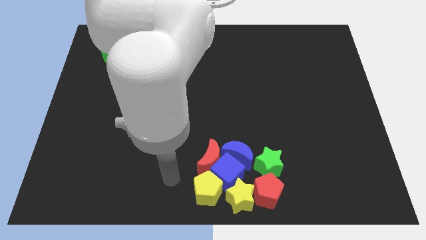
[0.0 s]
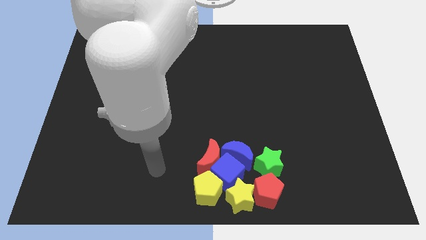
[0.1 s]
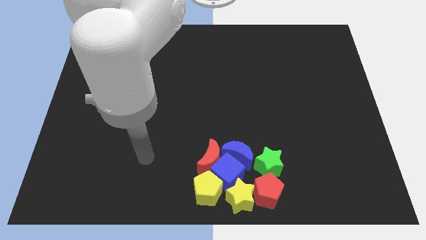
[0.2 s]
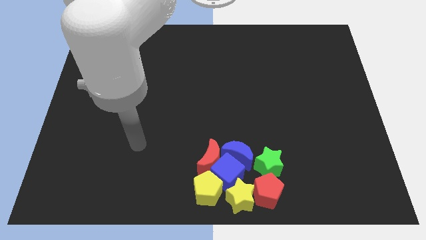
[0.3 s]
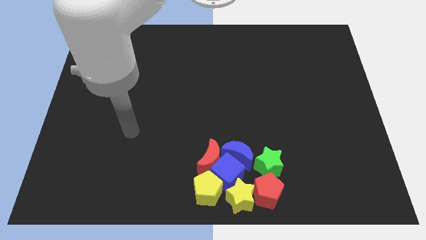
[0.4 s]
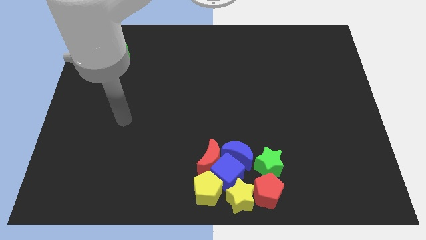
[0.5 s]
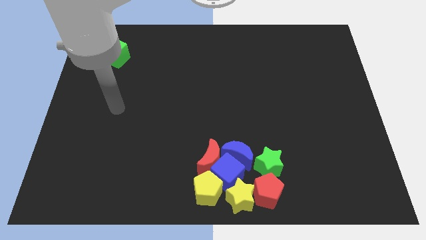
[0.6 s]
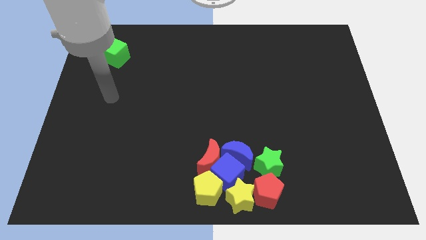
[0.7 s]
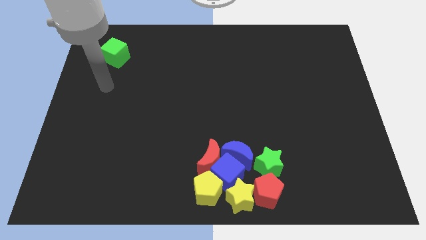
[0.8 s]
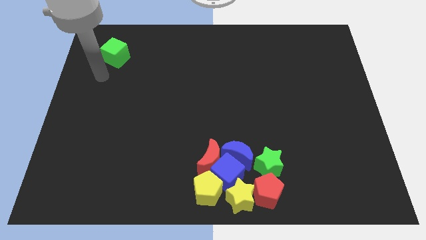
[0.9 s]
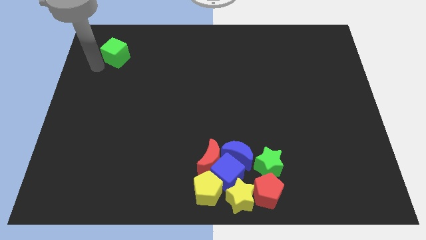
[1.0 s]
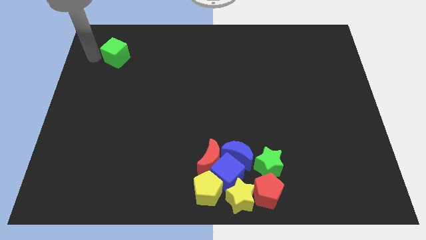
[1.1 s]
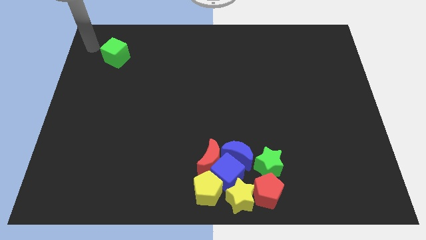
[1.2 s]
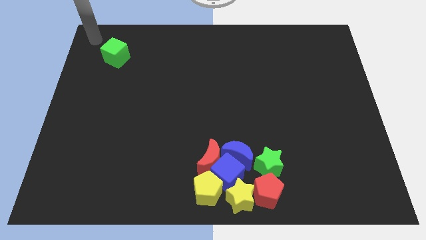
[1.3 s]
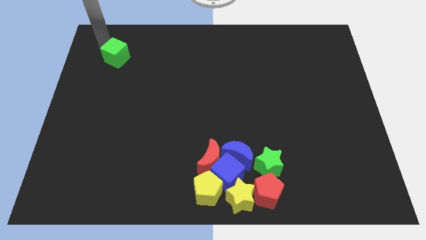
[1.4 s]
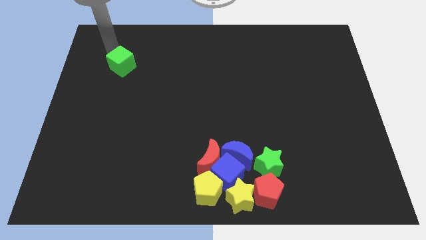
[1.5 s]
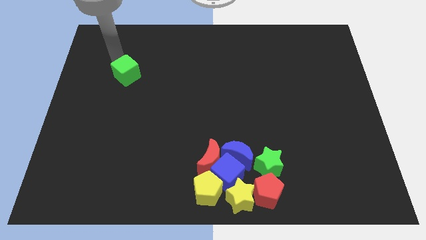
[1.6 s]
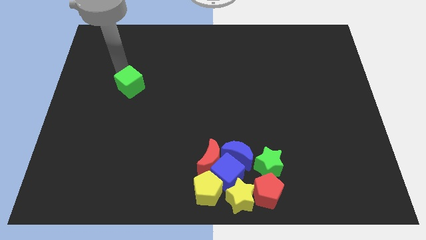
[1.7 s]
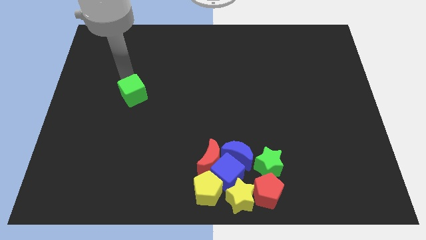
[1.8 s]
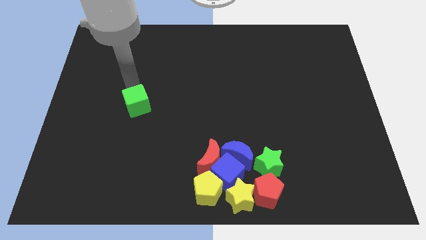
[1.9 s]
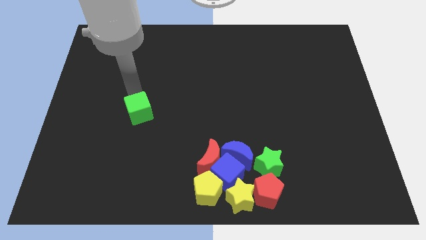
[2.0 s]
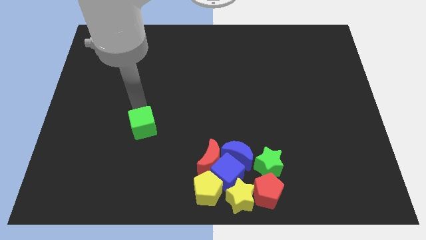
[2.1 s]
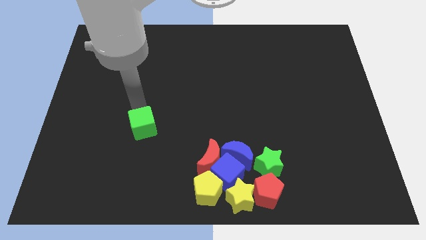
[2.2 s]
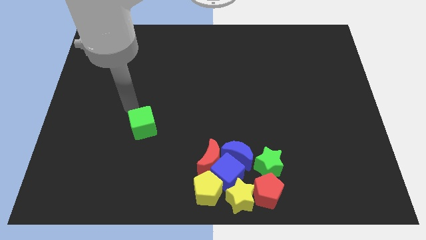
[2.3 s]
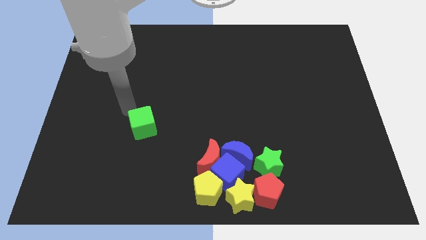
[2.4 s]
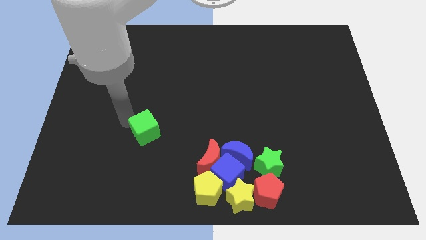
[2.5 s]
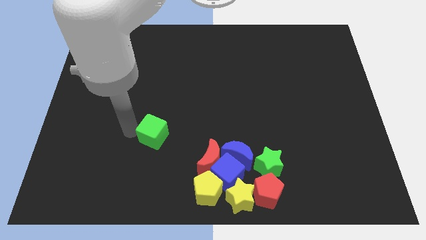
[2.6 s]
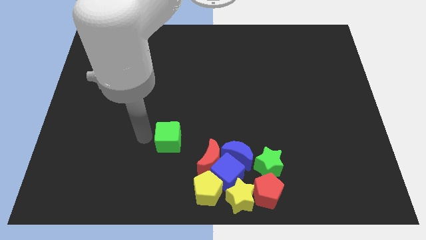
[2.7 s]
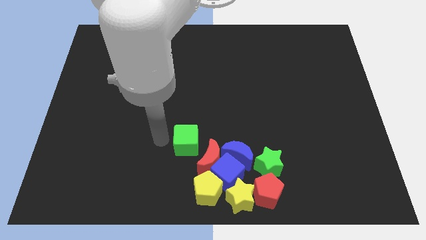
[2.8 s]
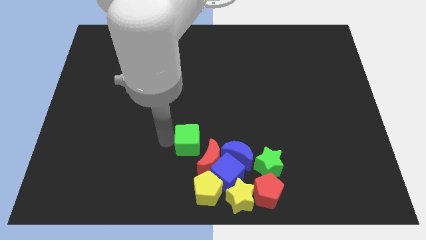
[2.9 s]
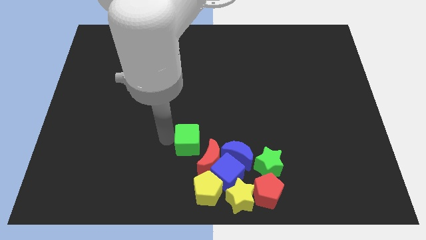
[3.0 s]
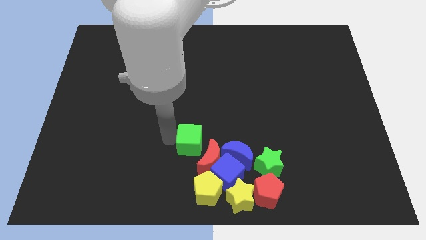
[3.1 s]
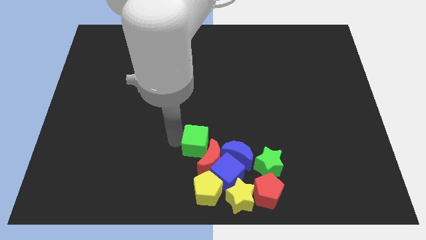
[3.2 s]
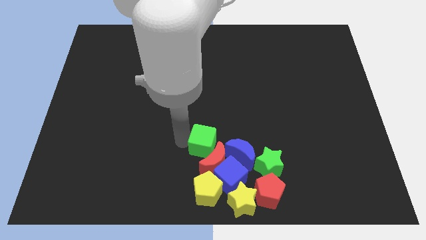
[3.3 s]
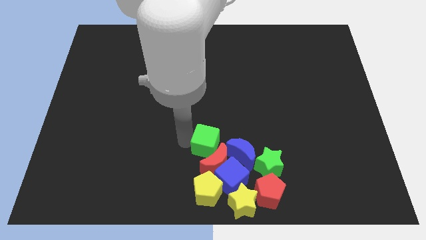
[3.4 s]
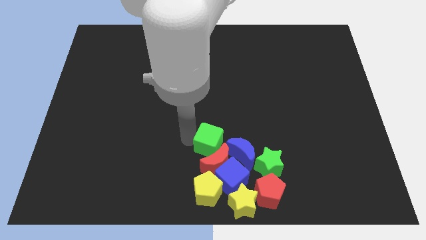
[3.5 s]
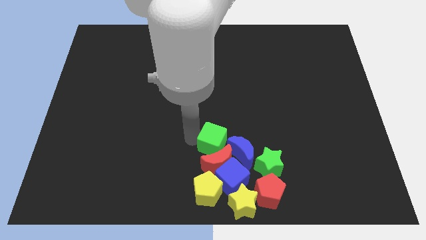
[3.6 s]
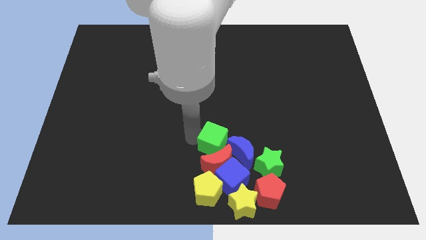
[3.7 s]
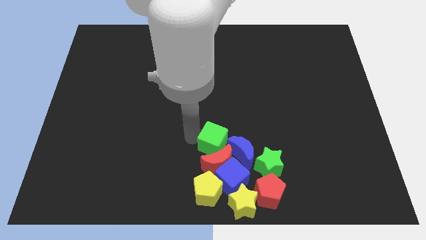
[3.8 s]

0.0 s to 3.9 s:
push the green cube into the group of the blocks

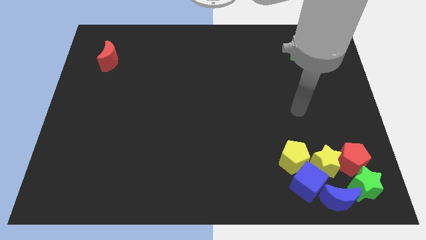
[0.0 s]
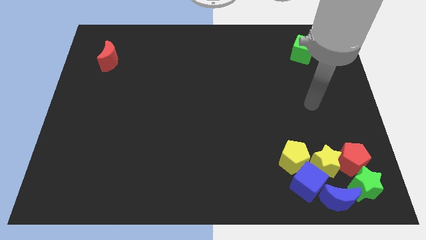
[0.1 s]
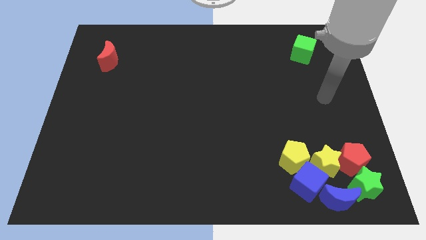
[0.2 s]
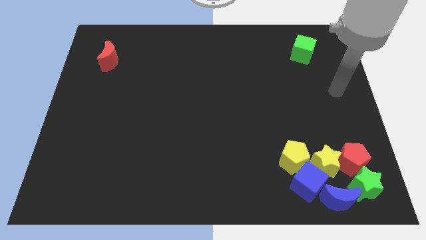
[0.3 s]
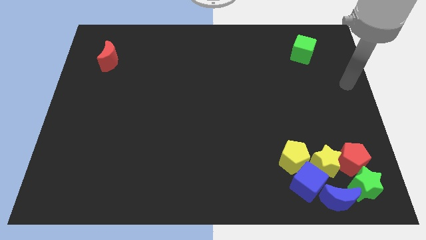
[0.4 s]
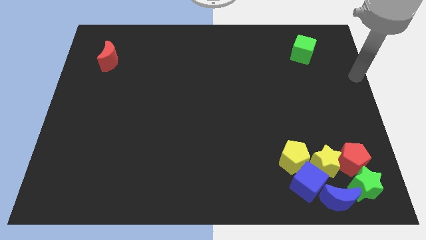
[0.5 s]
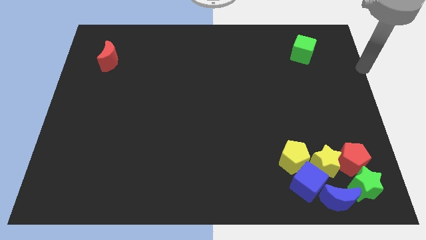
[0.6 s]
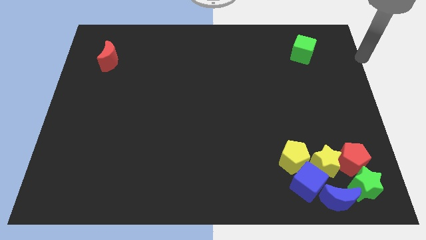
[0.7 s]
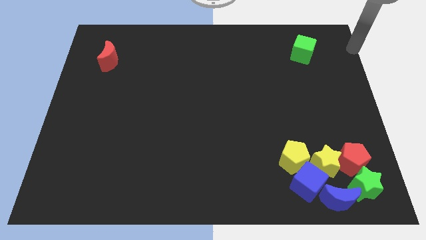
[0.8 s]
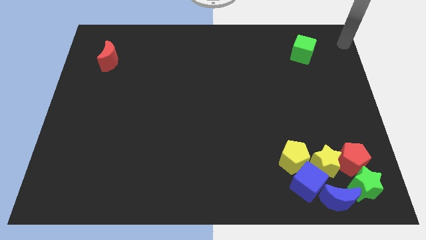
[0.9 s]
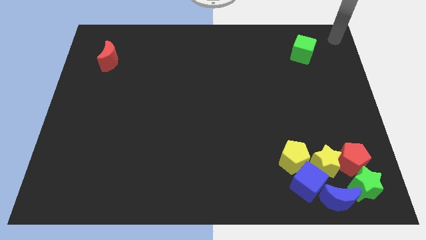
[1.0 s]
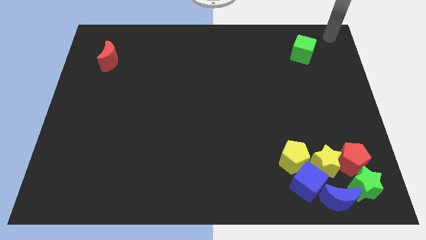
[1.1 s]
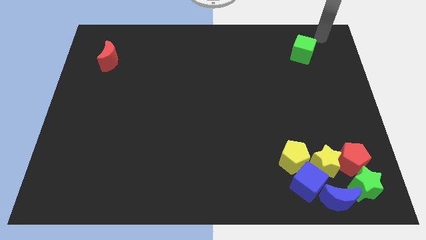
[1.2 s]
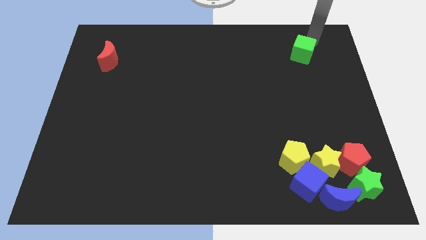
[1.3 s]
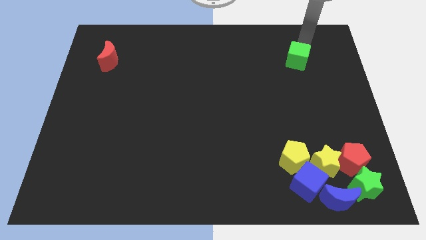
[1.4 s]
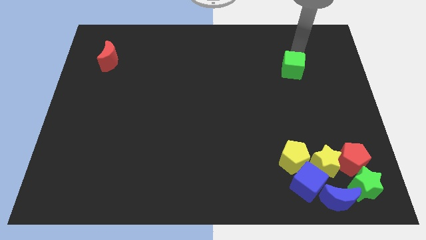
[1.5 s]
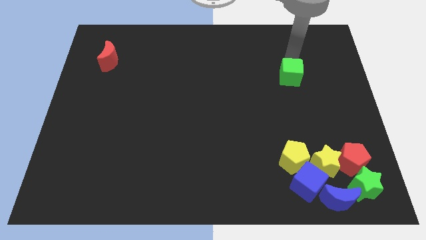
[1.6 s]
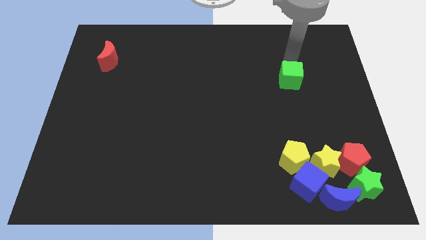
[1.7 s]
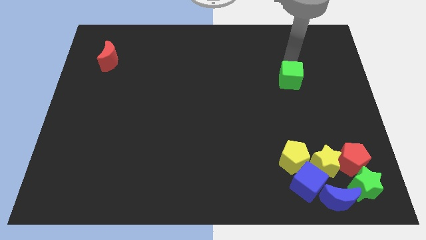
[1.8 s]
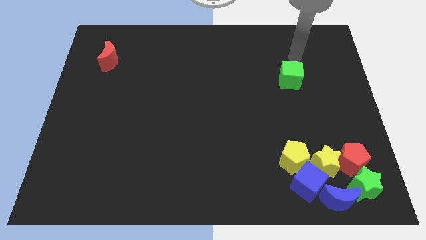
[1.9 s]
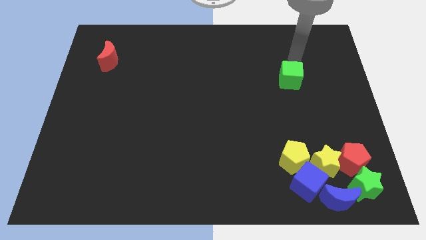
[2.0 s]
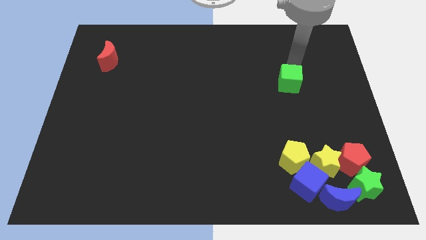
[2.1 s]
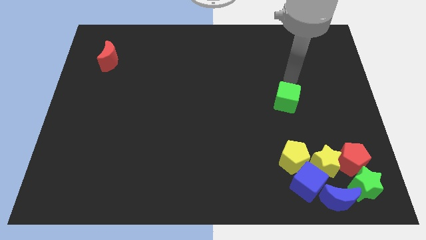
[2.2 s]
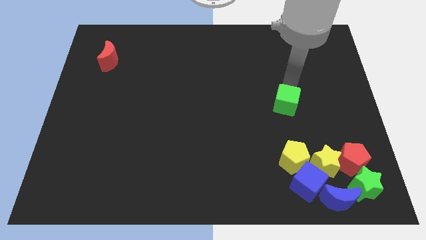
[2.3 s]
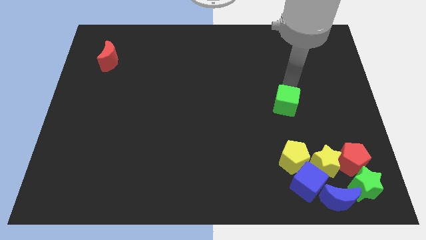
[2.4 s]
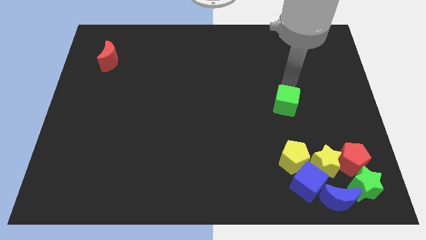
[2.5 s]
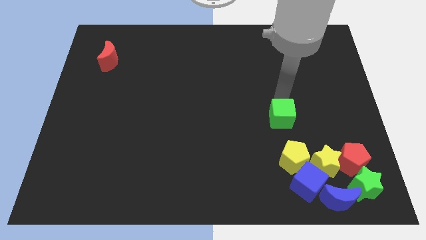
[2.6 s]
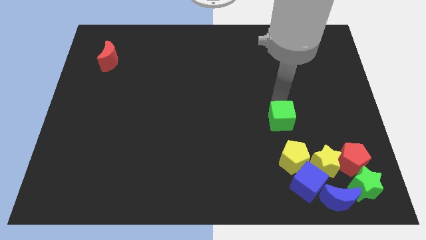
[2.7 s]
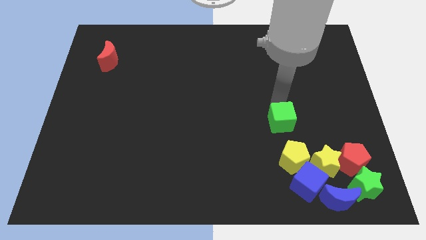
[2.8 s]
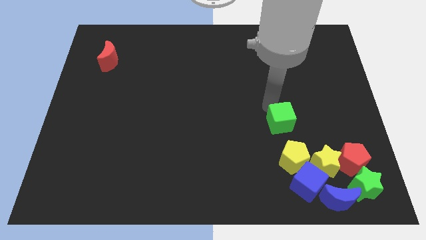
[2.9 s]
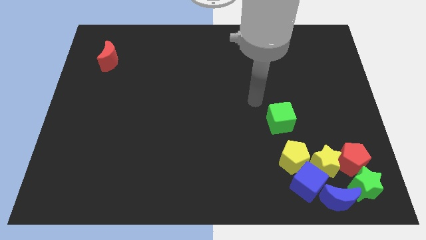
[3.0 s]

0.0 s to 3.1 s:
drag the green cube towards down

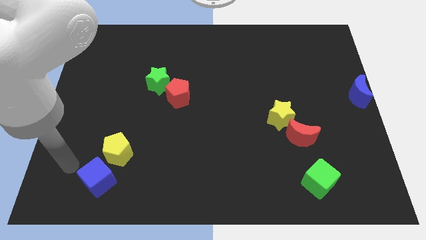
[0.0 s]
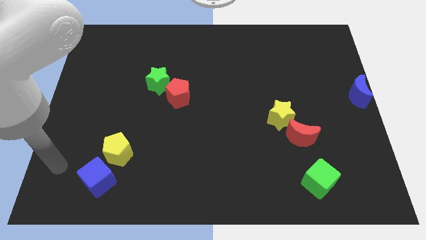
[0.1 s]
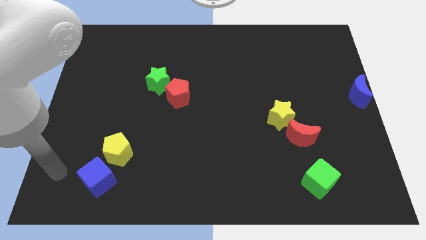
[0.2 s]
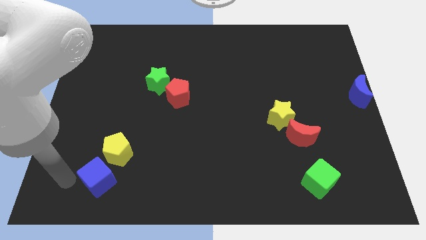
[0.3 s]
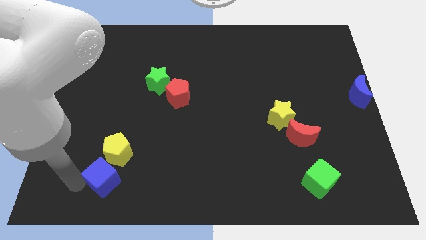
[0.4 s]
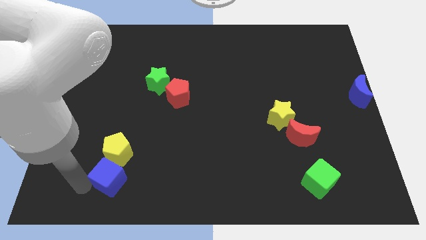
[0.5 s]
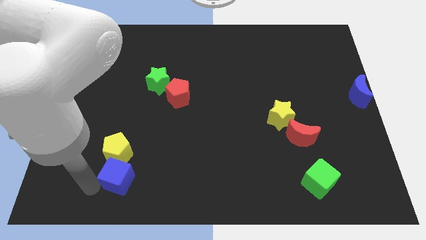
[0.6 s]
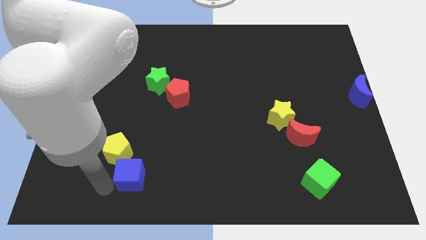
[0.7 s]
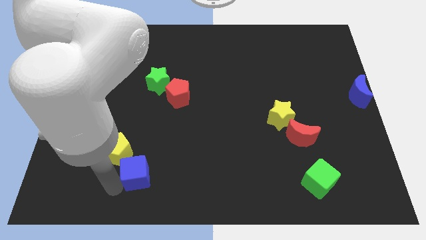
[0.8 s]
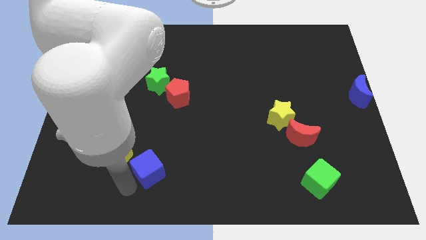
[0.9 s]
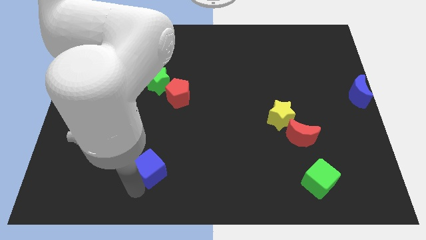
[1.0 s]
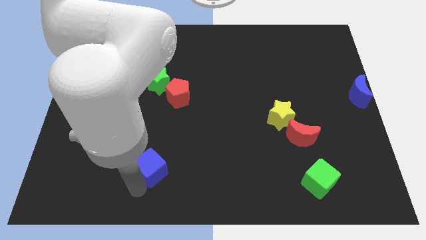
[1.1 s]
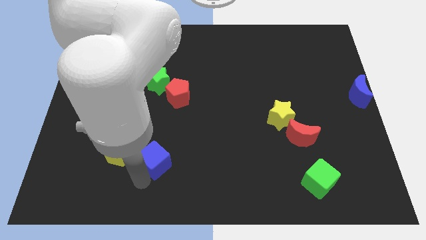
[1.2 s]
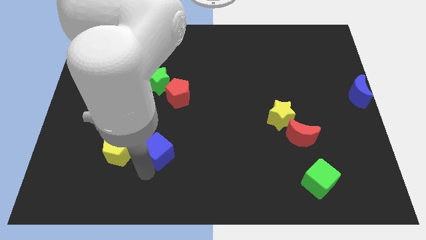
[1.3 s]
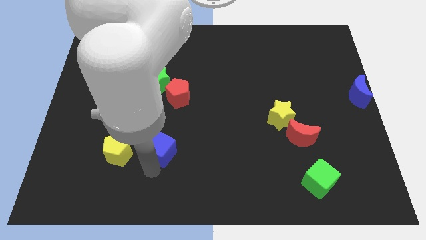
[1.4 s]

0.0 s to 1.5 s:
place the blue cube right to the yellow pentagon

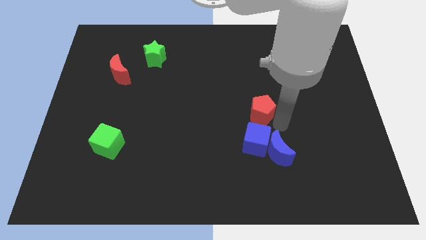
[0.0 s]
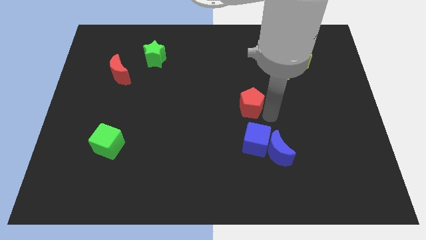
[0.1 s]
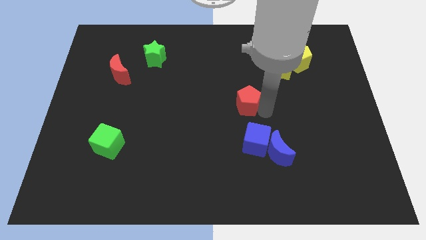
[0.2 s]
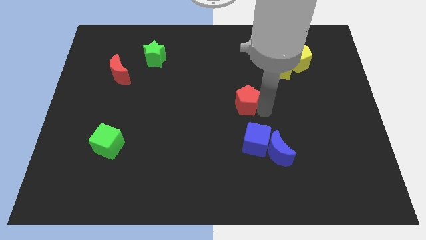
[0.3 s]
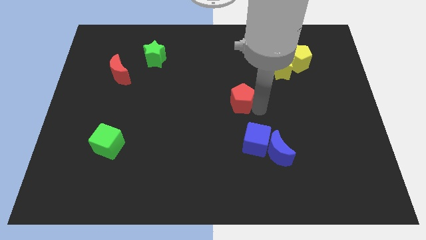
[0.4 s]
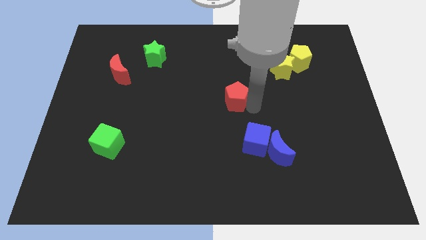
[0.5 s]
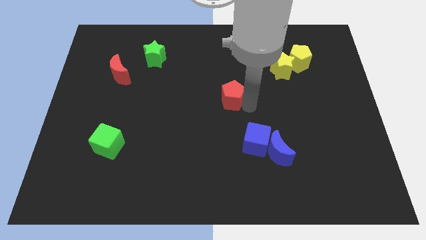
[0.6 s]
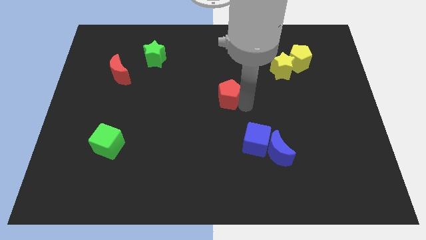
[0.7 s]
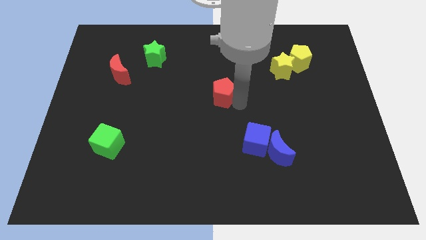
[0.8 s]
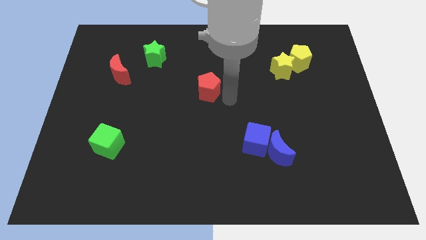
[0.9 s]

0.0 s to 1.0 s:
put red pentagon in center
